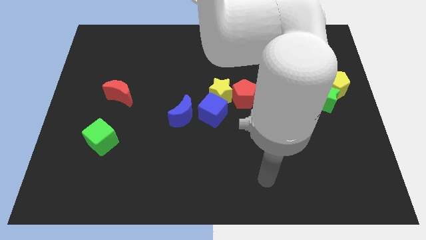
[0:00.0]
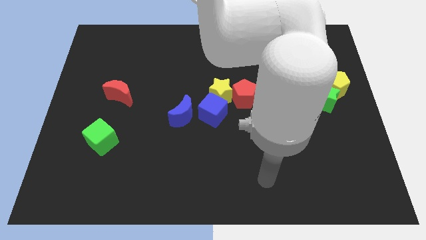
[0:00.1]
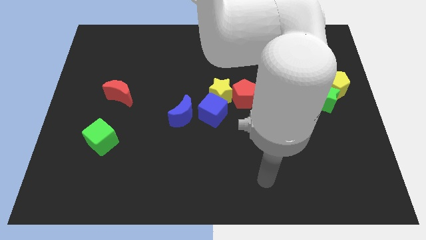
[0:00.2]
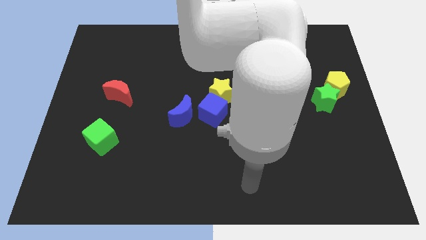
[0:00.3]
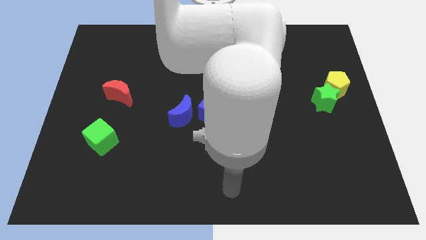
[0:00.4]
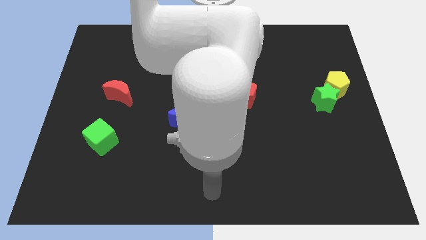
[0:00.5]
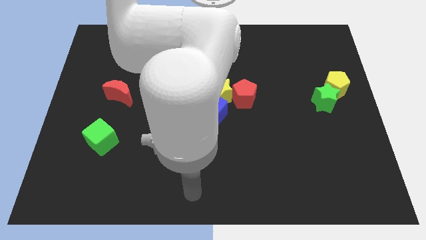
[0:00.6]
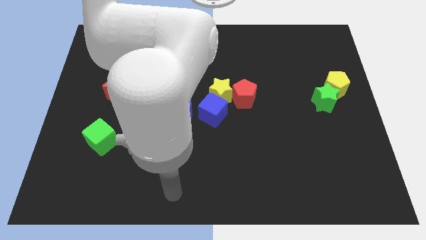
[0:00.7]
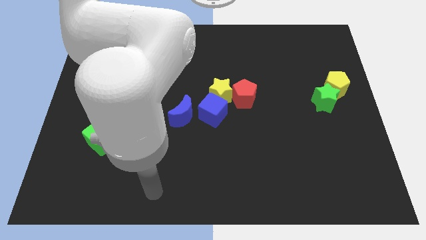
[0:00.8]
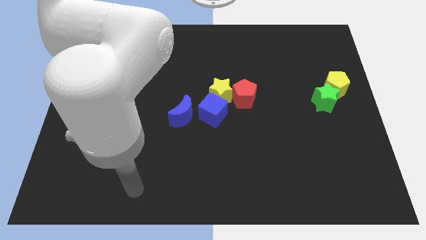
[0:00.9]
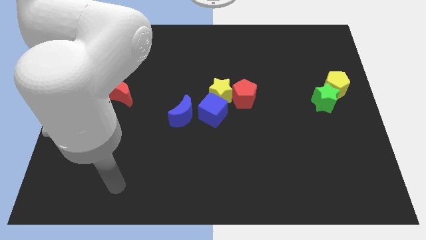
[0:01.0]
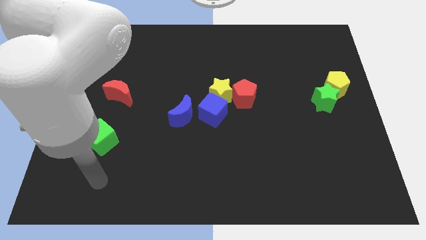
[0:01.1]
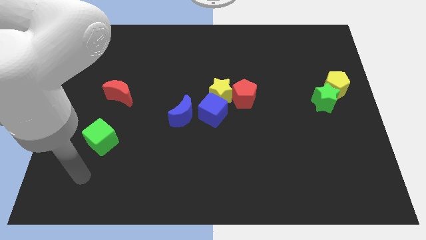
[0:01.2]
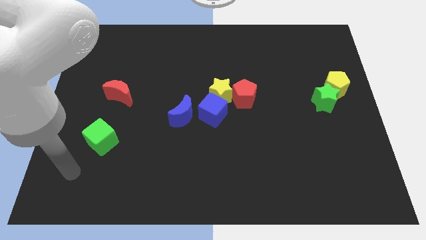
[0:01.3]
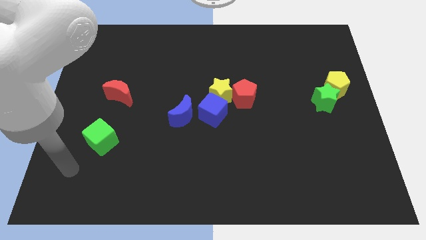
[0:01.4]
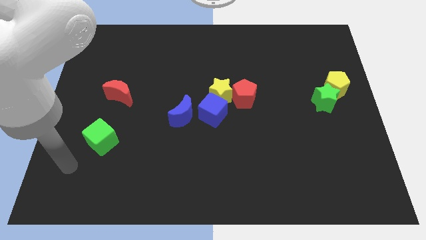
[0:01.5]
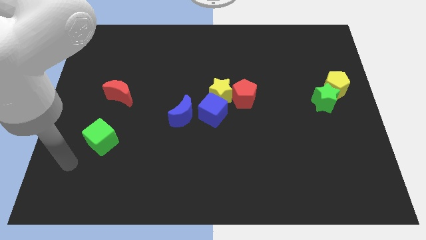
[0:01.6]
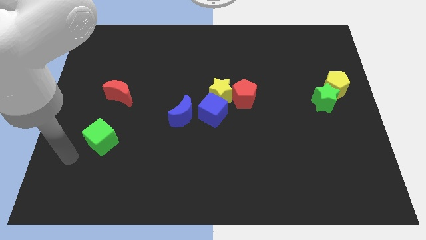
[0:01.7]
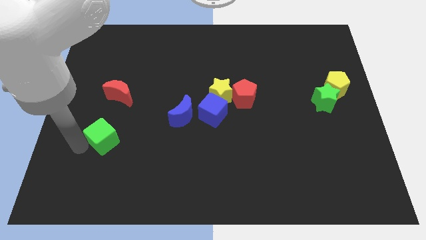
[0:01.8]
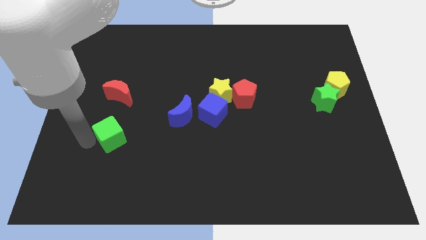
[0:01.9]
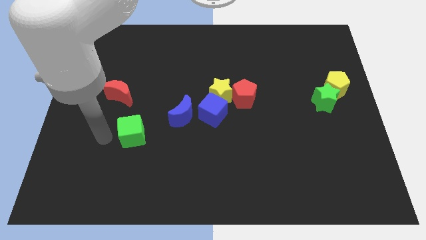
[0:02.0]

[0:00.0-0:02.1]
put your arm on the left side of the green cube

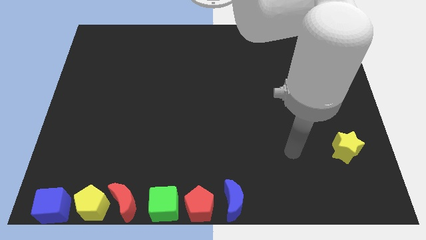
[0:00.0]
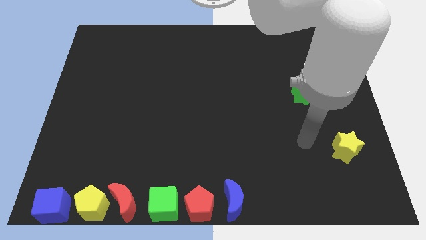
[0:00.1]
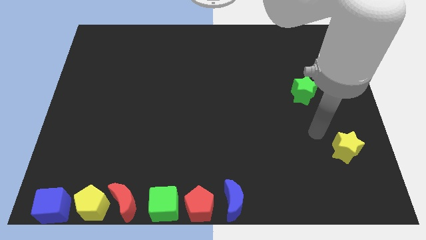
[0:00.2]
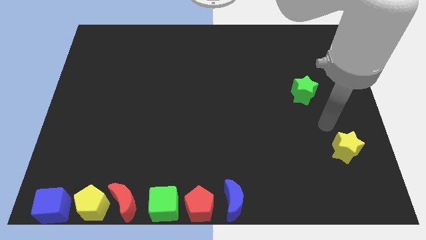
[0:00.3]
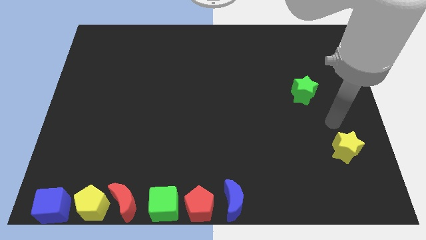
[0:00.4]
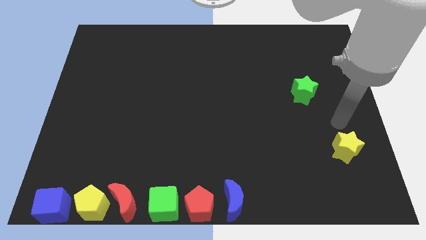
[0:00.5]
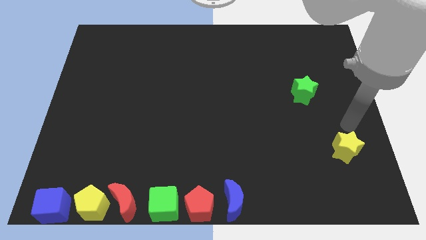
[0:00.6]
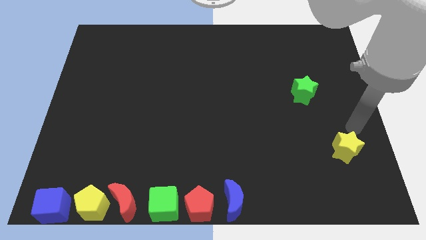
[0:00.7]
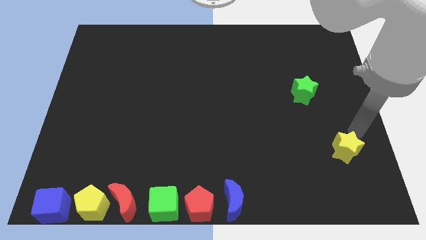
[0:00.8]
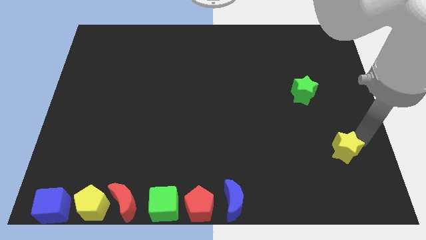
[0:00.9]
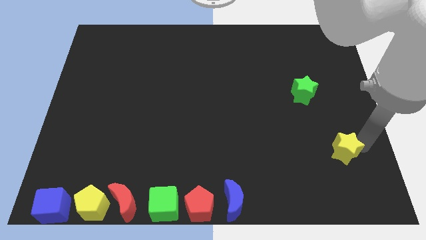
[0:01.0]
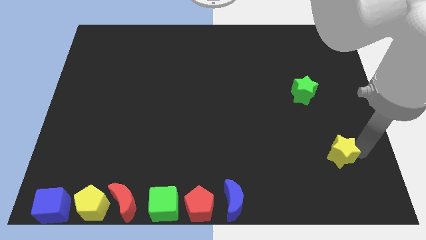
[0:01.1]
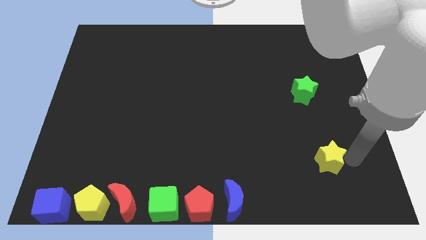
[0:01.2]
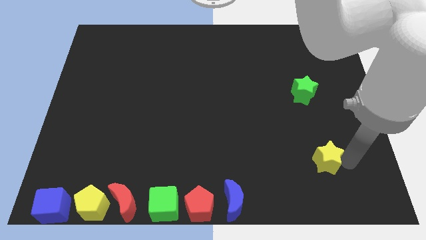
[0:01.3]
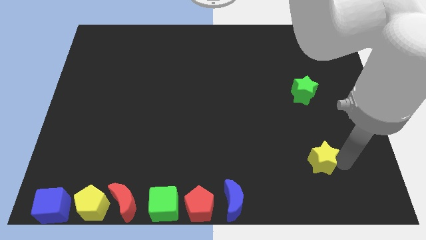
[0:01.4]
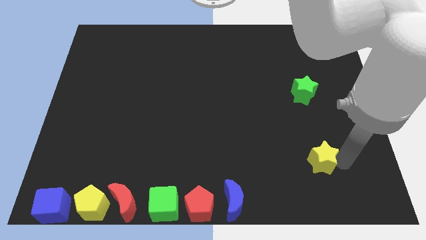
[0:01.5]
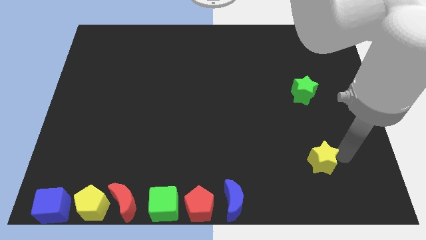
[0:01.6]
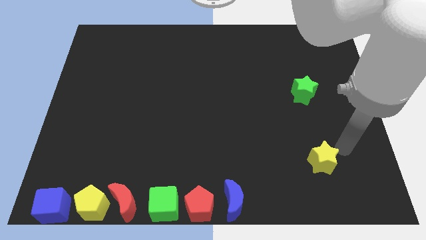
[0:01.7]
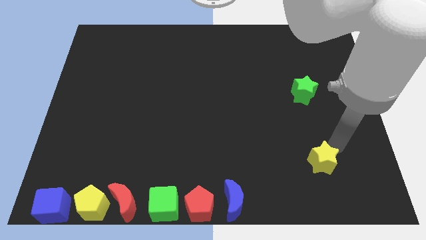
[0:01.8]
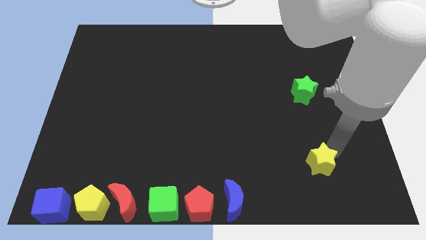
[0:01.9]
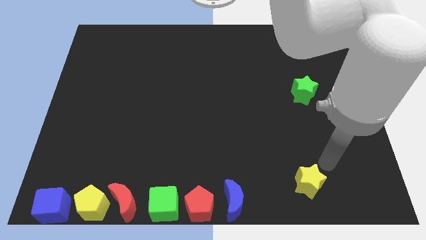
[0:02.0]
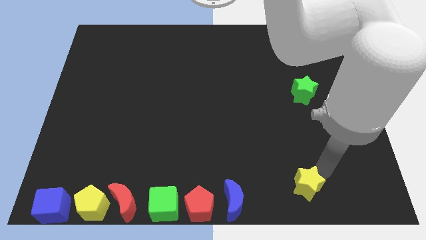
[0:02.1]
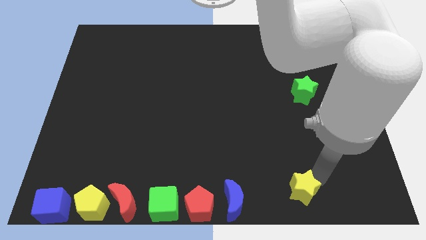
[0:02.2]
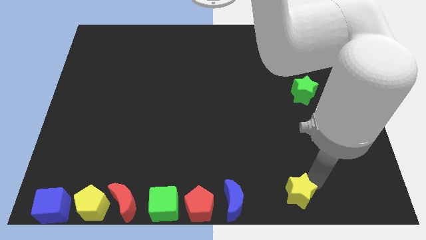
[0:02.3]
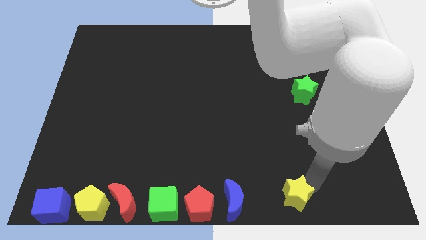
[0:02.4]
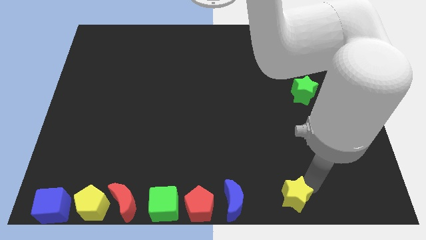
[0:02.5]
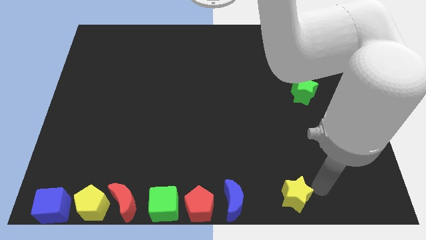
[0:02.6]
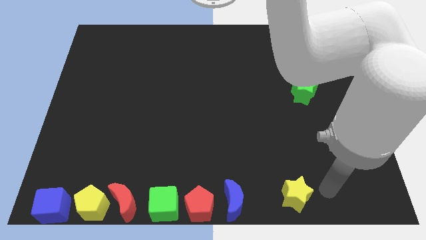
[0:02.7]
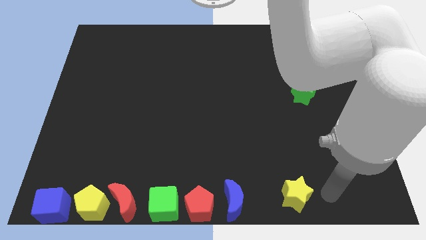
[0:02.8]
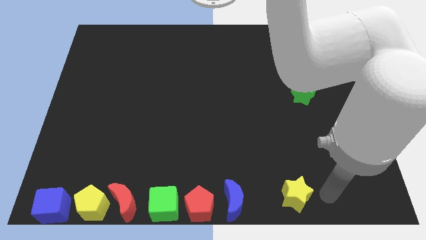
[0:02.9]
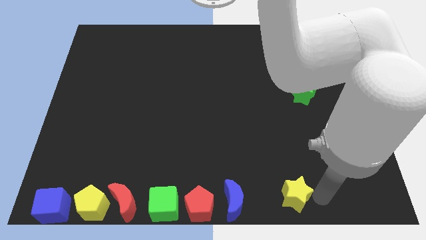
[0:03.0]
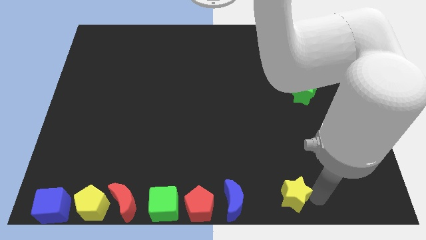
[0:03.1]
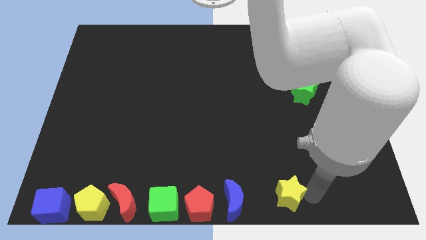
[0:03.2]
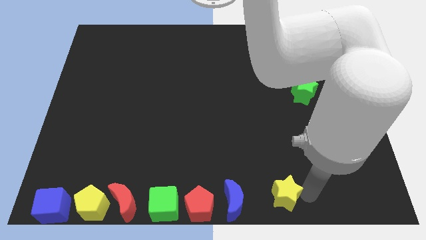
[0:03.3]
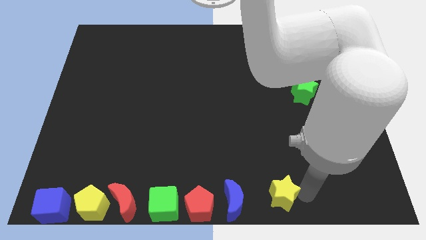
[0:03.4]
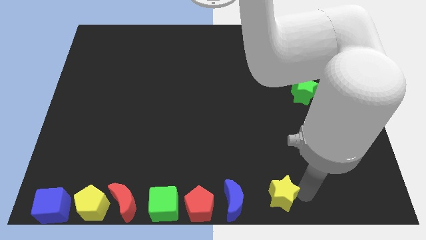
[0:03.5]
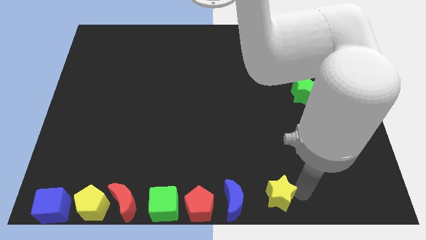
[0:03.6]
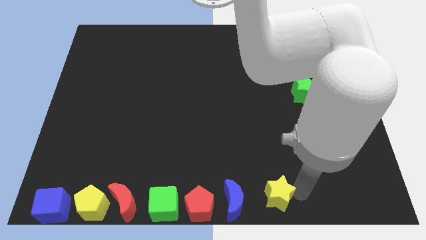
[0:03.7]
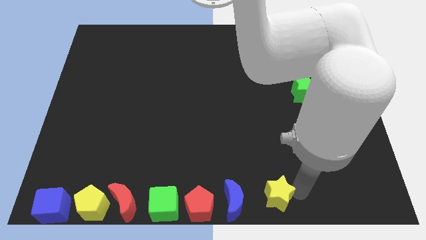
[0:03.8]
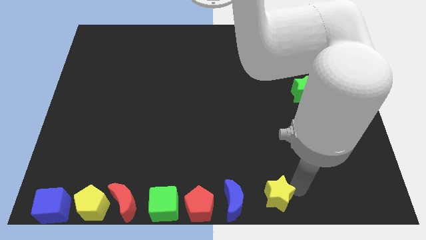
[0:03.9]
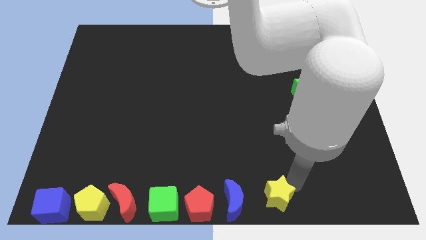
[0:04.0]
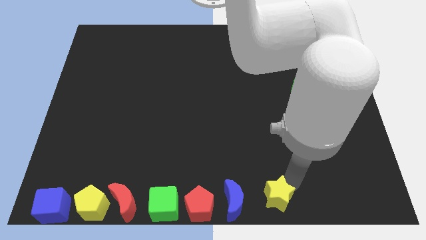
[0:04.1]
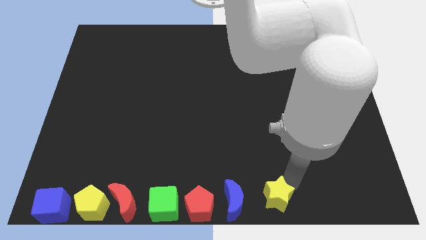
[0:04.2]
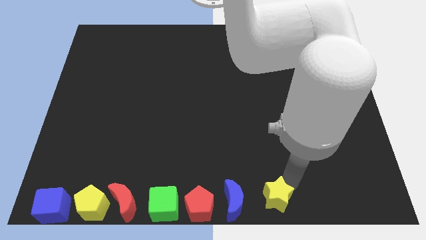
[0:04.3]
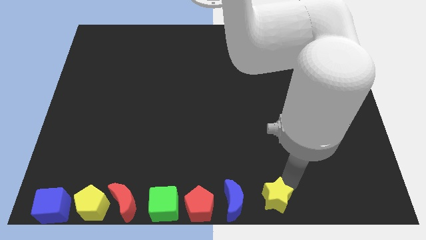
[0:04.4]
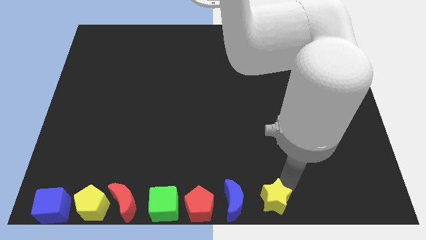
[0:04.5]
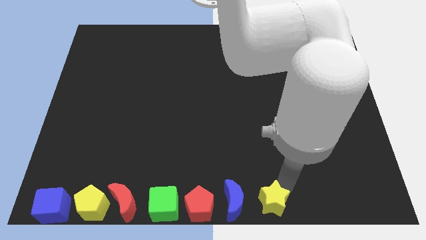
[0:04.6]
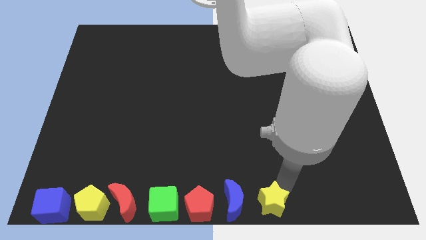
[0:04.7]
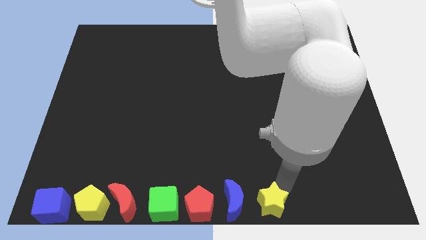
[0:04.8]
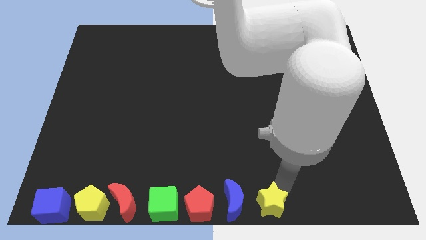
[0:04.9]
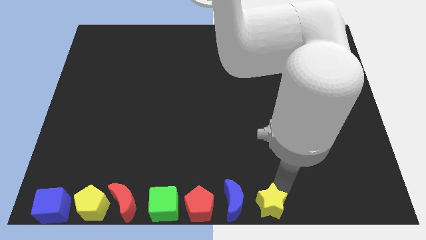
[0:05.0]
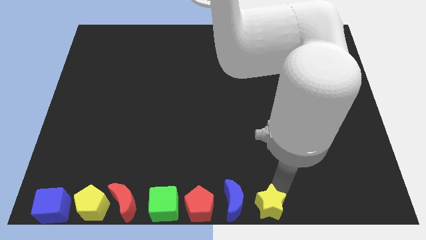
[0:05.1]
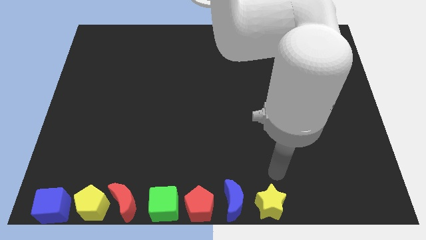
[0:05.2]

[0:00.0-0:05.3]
place yellow star below the blue crescent

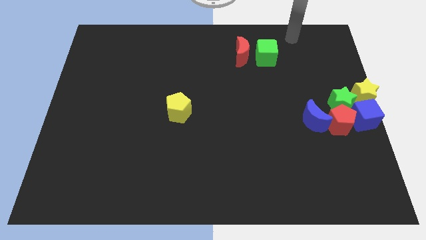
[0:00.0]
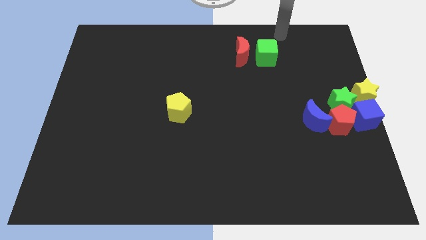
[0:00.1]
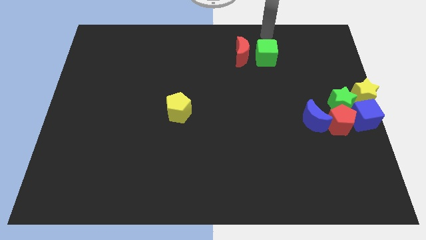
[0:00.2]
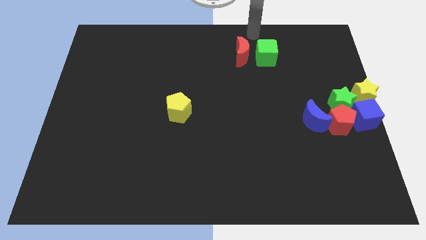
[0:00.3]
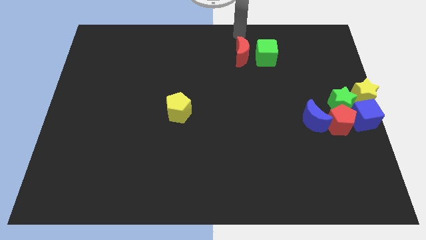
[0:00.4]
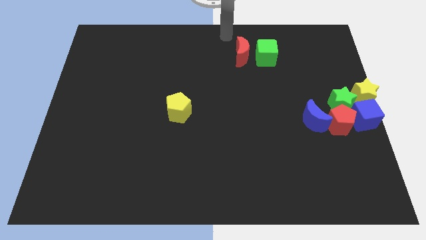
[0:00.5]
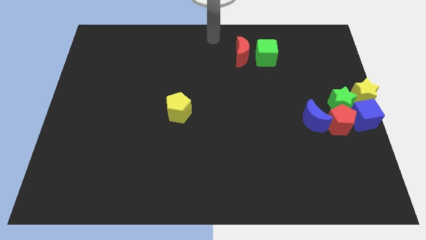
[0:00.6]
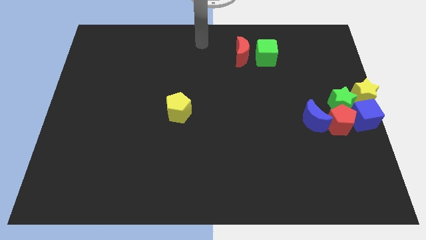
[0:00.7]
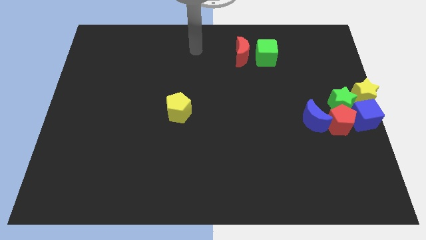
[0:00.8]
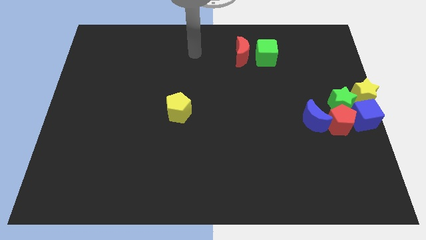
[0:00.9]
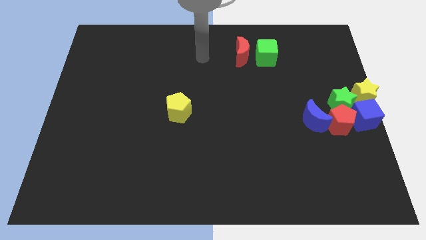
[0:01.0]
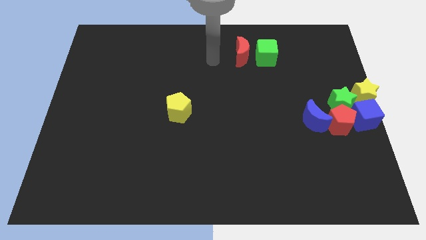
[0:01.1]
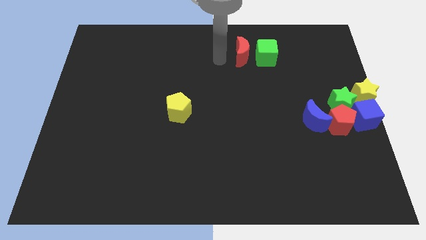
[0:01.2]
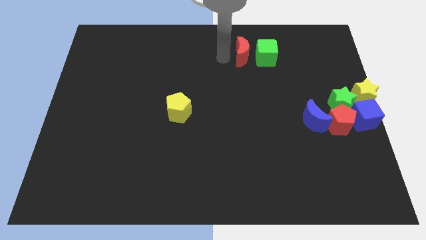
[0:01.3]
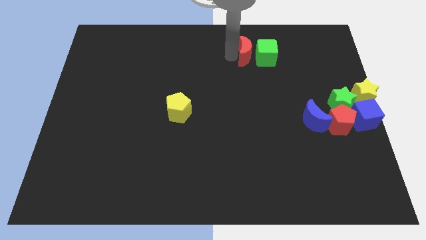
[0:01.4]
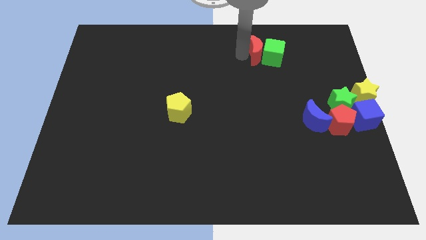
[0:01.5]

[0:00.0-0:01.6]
move the arm to the left of red crescent

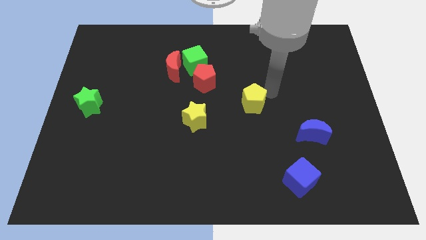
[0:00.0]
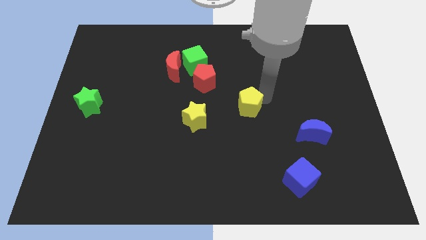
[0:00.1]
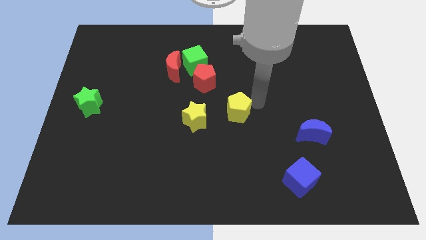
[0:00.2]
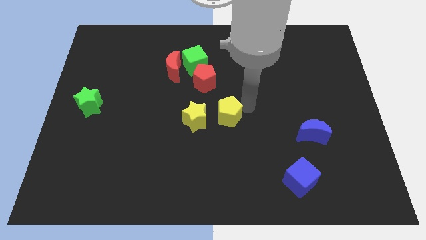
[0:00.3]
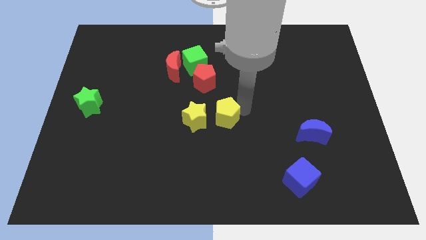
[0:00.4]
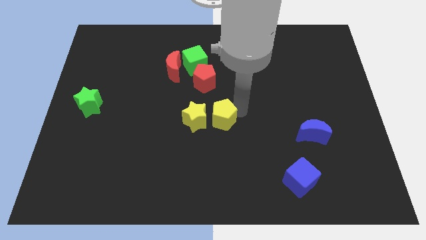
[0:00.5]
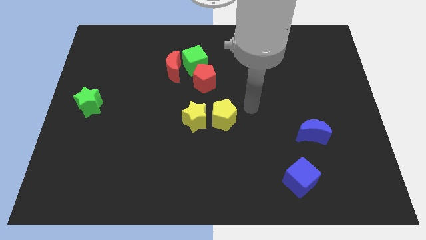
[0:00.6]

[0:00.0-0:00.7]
place the yellow pentagon right side to a yellow star
